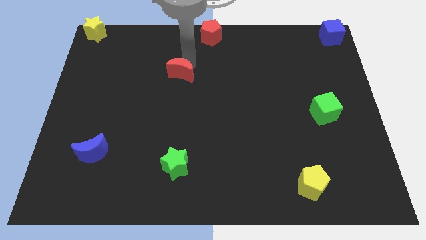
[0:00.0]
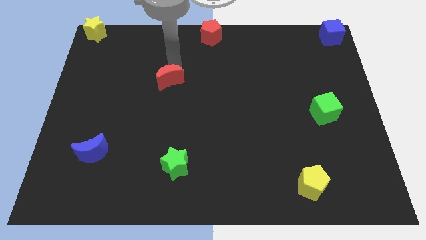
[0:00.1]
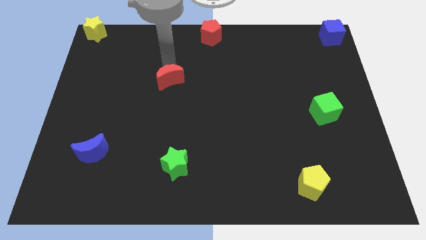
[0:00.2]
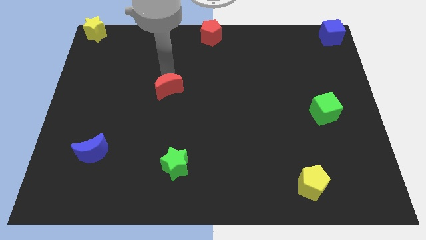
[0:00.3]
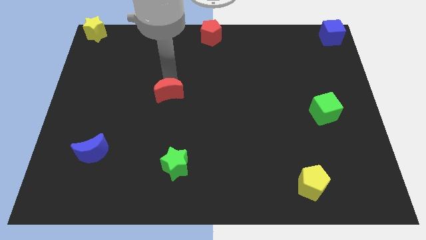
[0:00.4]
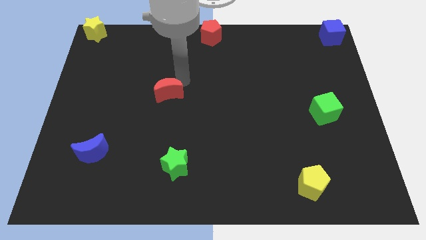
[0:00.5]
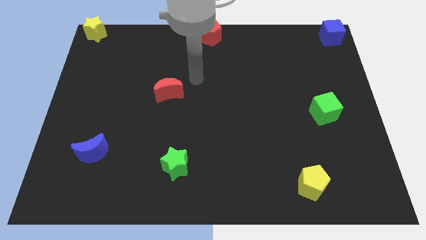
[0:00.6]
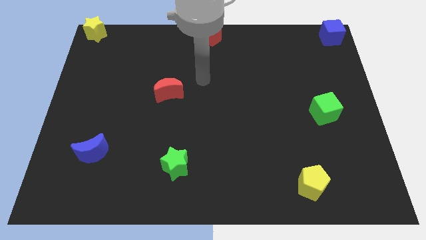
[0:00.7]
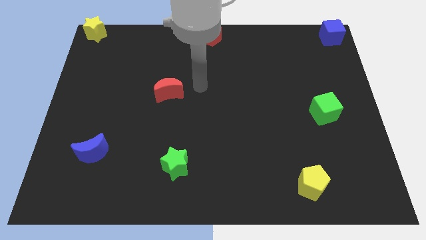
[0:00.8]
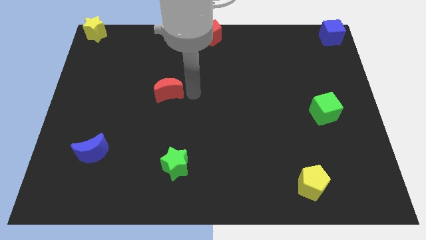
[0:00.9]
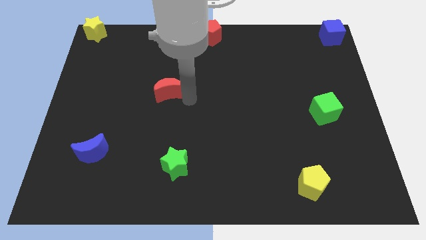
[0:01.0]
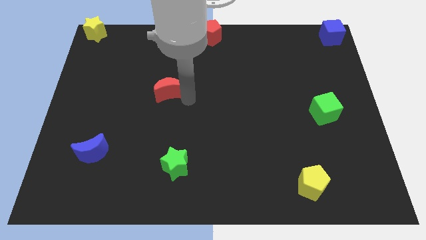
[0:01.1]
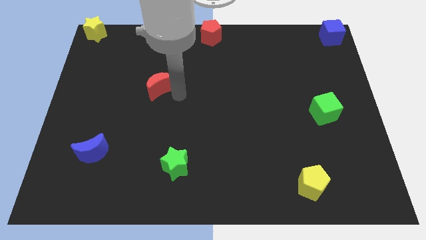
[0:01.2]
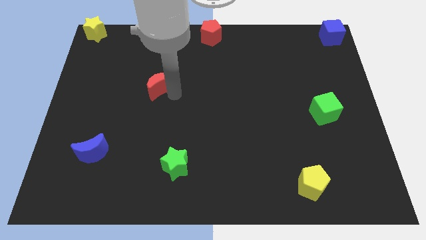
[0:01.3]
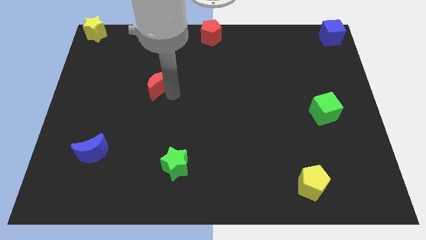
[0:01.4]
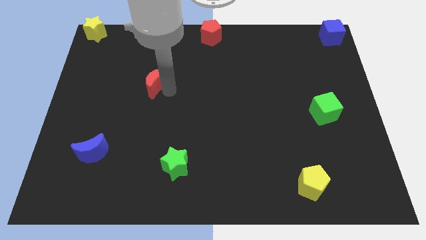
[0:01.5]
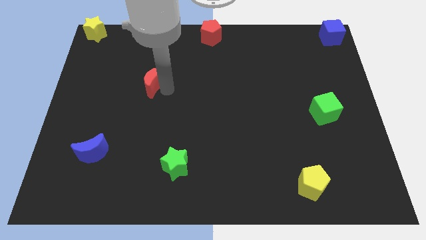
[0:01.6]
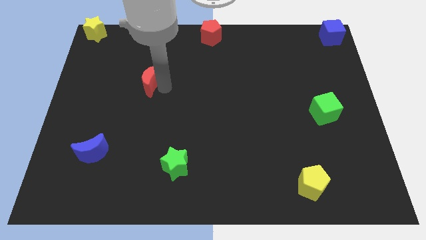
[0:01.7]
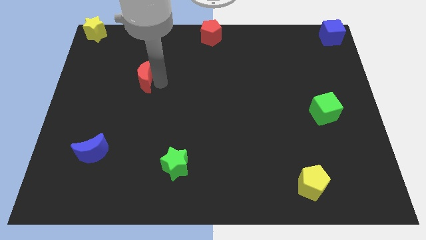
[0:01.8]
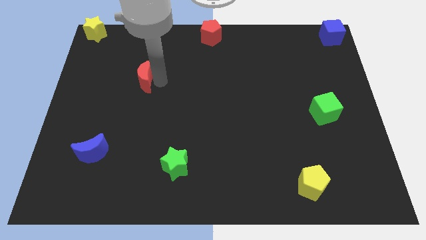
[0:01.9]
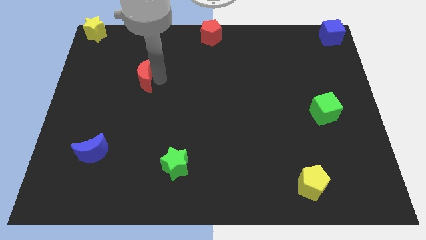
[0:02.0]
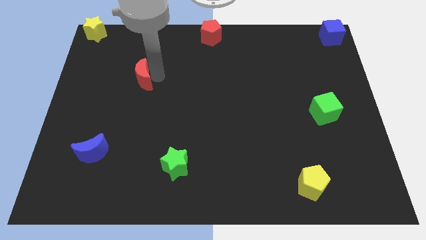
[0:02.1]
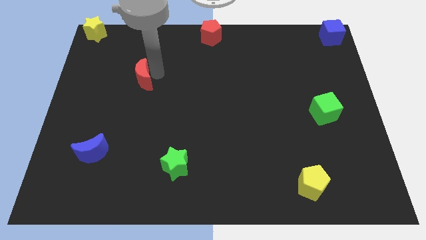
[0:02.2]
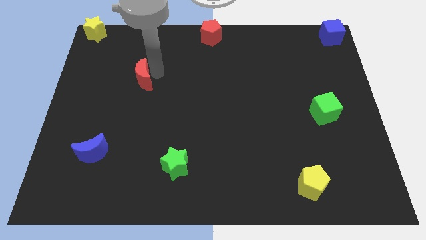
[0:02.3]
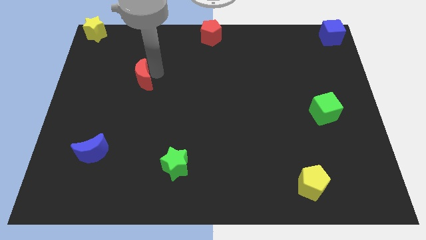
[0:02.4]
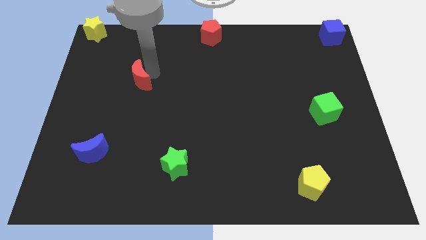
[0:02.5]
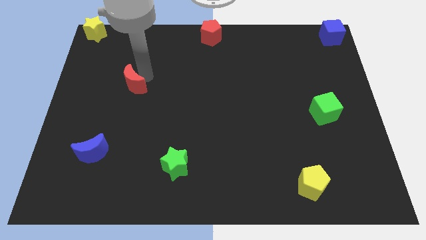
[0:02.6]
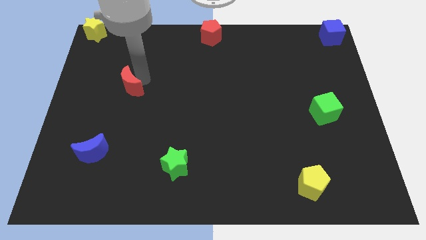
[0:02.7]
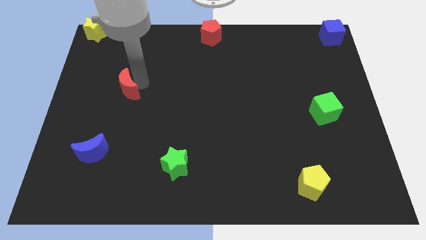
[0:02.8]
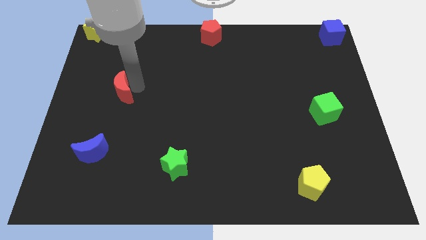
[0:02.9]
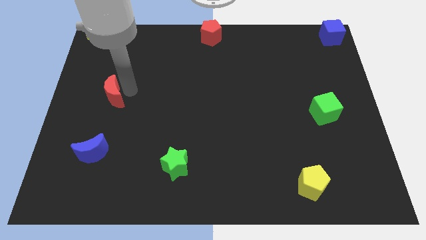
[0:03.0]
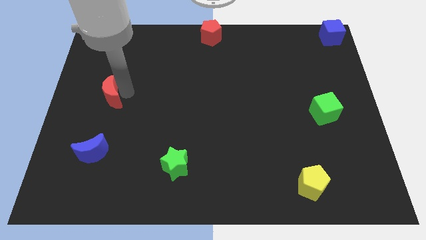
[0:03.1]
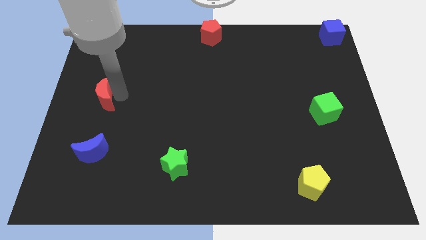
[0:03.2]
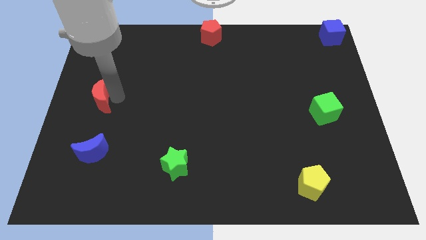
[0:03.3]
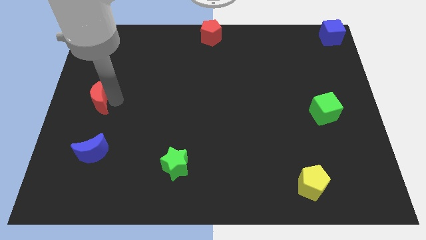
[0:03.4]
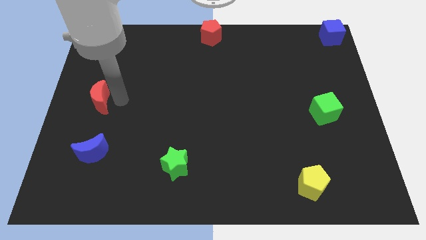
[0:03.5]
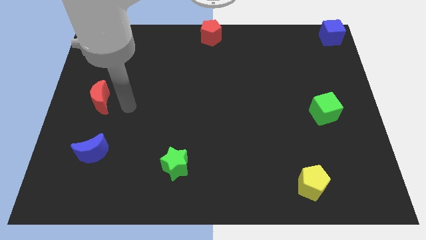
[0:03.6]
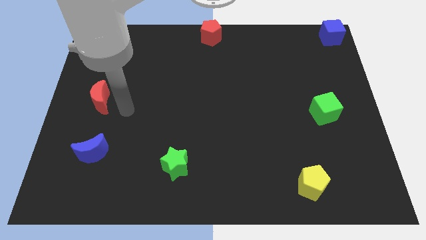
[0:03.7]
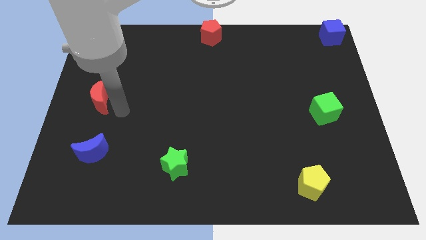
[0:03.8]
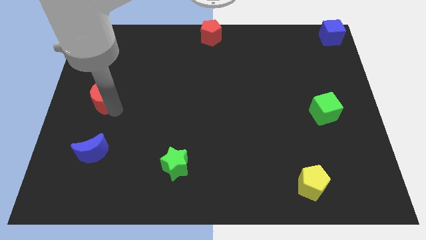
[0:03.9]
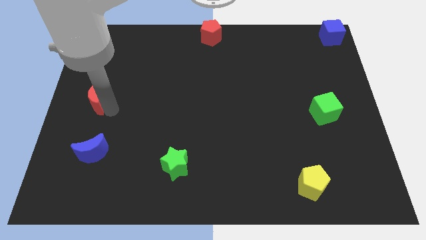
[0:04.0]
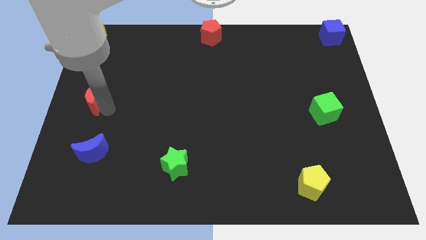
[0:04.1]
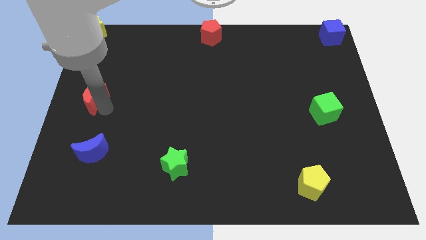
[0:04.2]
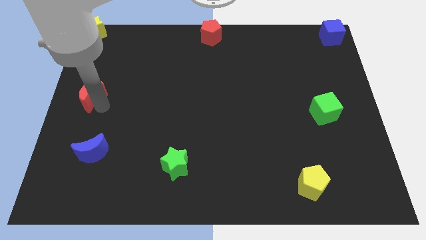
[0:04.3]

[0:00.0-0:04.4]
put the red crescent above blue crescent

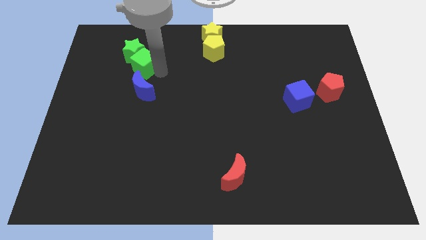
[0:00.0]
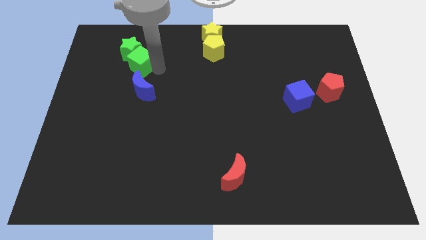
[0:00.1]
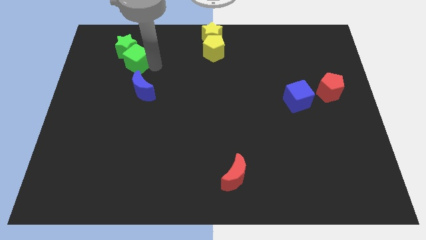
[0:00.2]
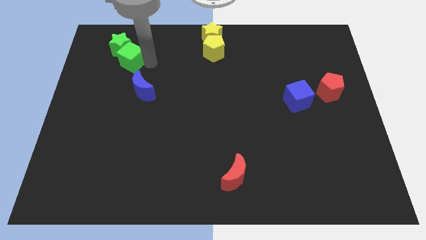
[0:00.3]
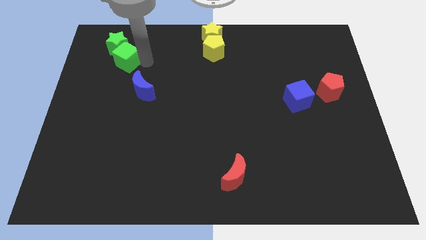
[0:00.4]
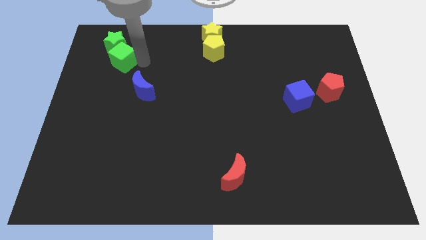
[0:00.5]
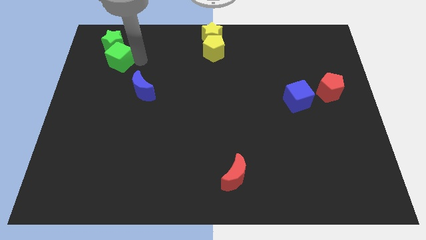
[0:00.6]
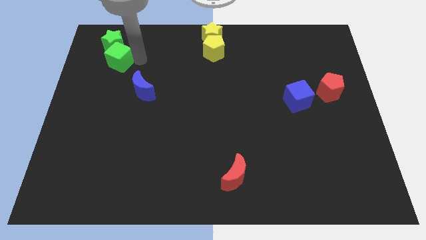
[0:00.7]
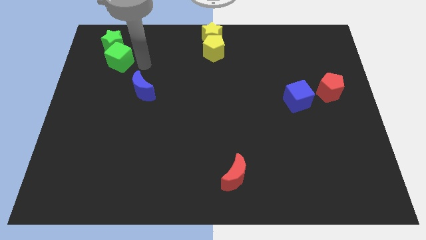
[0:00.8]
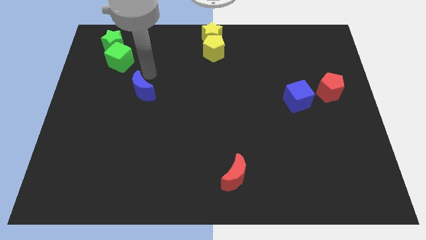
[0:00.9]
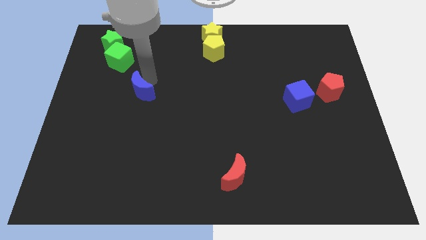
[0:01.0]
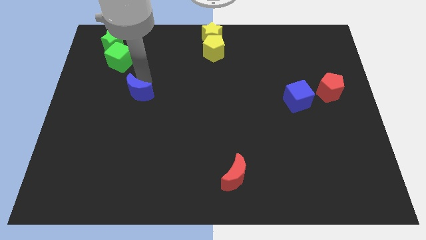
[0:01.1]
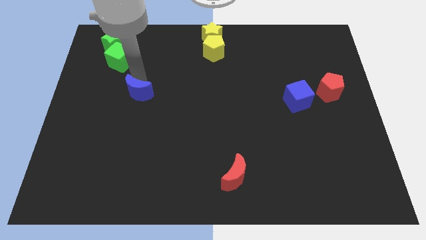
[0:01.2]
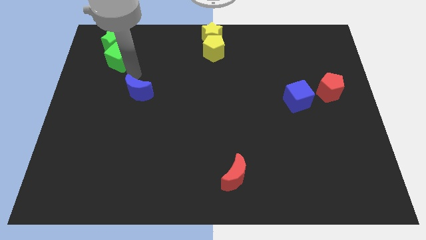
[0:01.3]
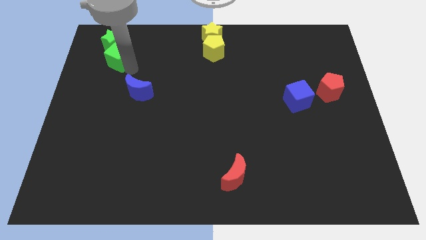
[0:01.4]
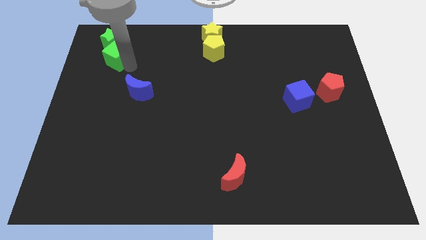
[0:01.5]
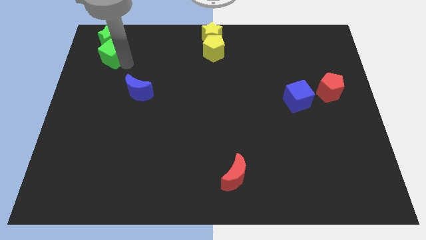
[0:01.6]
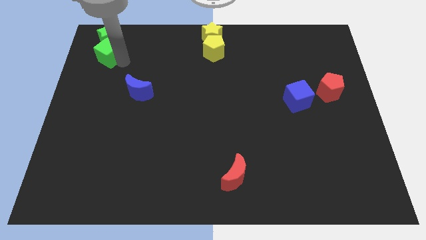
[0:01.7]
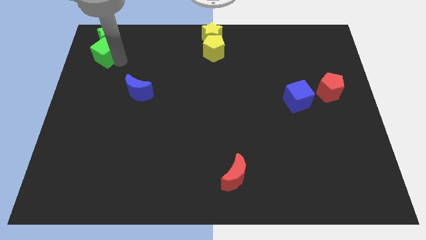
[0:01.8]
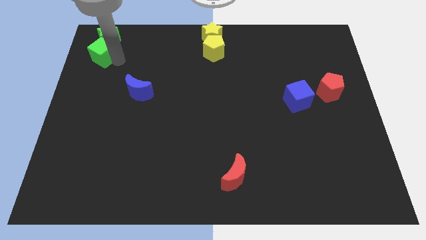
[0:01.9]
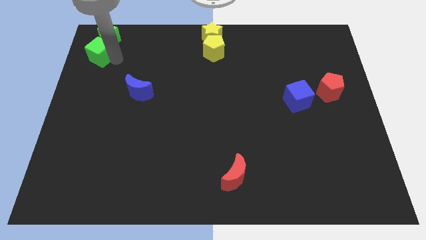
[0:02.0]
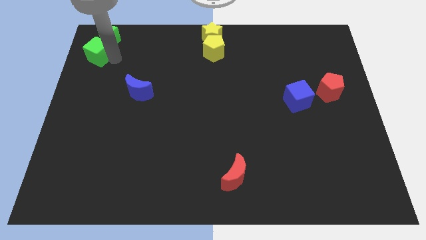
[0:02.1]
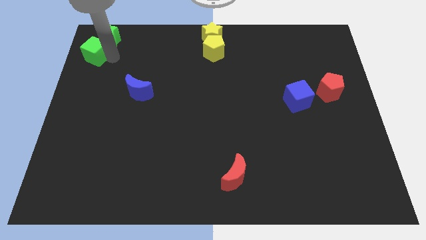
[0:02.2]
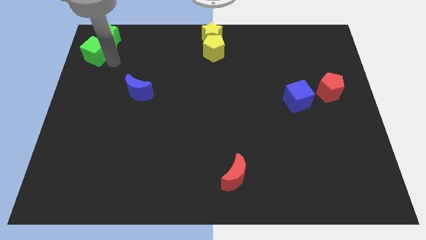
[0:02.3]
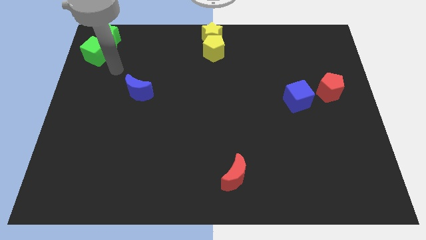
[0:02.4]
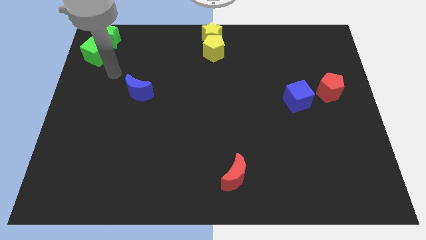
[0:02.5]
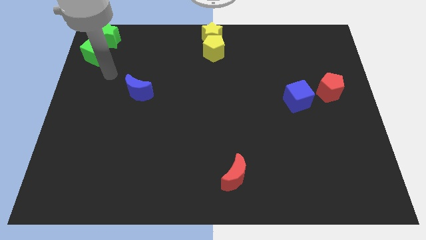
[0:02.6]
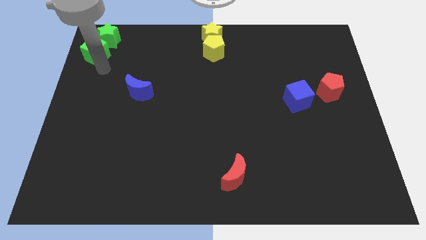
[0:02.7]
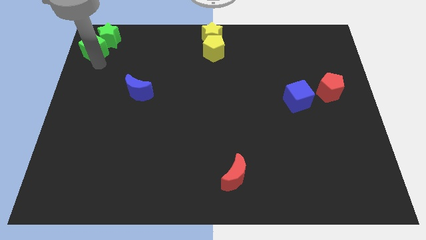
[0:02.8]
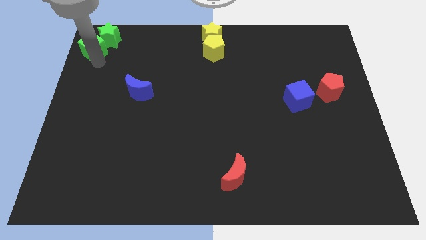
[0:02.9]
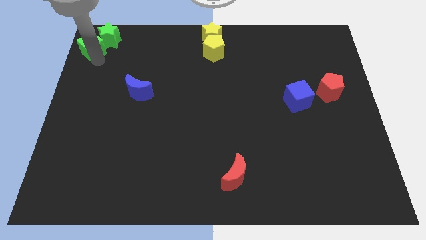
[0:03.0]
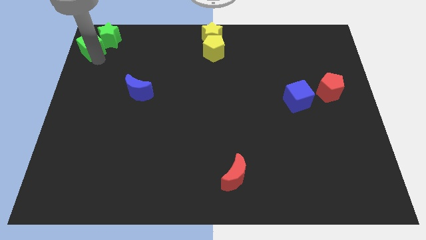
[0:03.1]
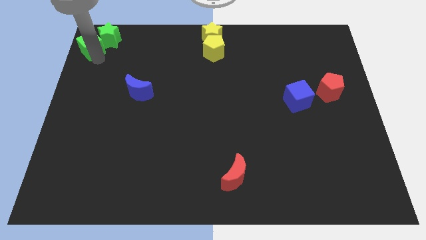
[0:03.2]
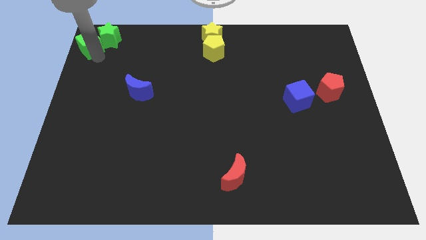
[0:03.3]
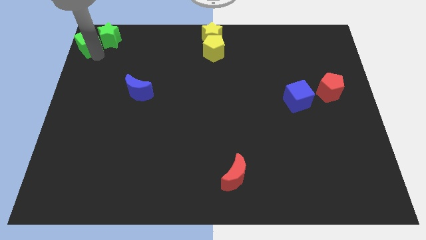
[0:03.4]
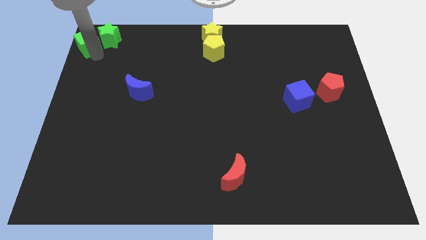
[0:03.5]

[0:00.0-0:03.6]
slide the green objects to the top left side of the board

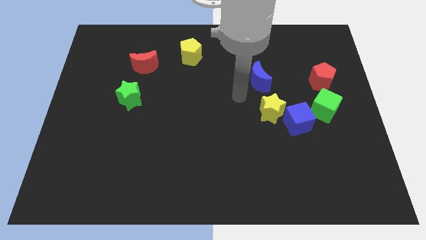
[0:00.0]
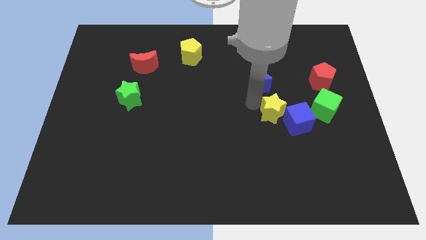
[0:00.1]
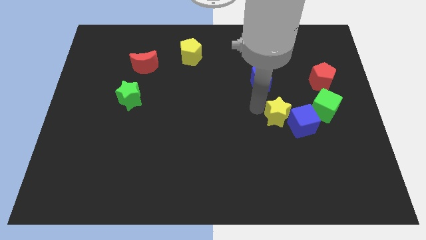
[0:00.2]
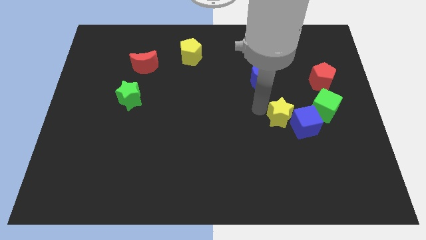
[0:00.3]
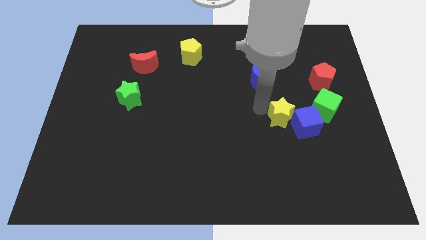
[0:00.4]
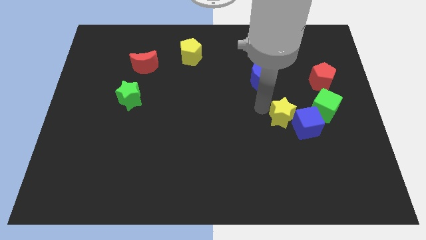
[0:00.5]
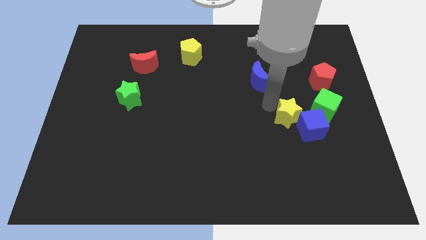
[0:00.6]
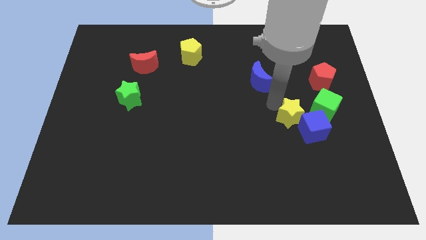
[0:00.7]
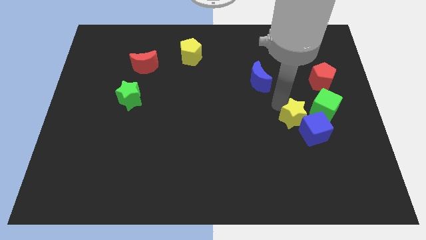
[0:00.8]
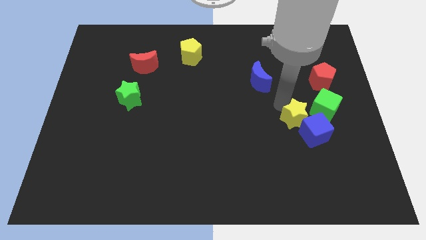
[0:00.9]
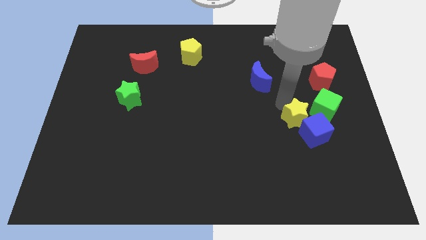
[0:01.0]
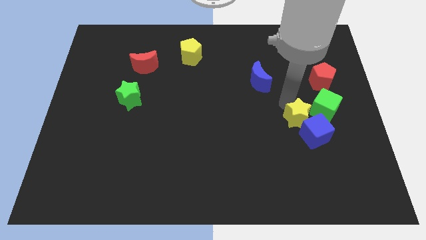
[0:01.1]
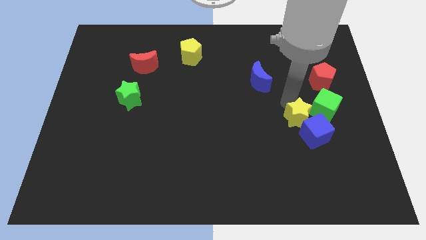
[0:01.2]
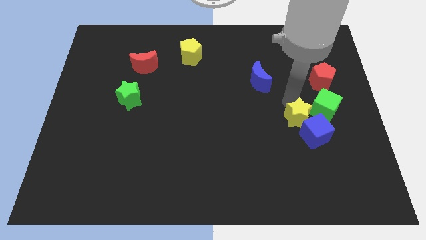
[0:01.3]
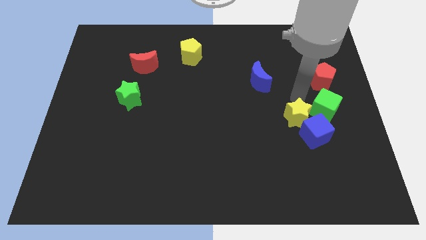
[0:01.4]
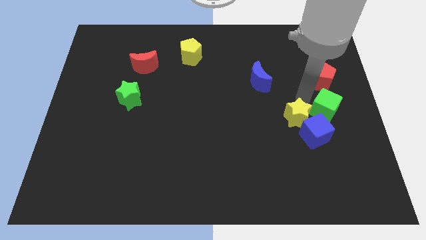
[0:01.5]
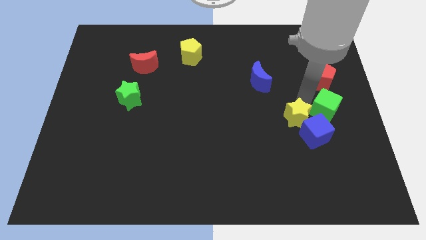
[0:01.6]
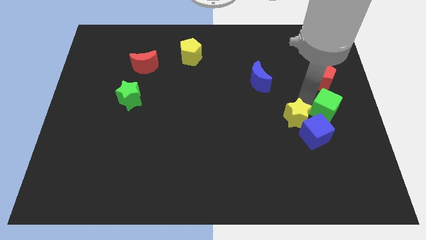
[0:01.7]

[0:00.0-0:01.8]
push the yellow star and blue cube into the green cube
